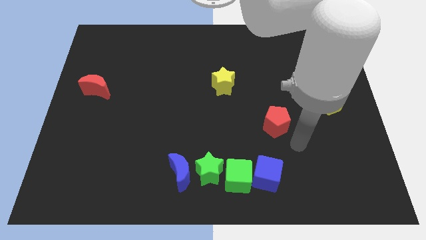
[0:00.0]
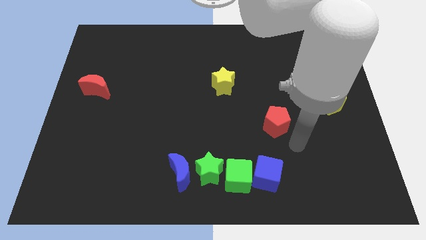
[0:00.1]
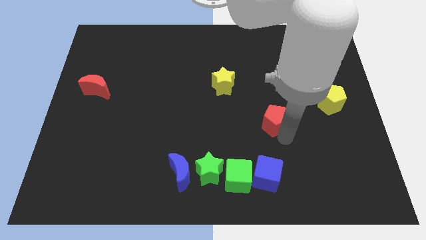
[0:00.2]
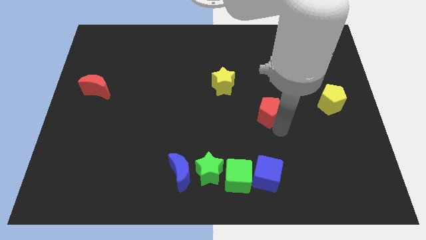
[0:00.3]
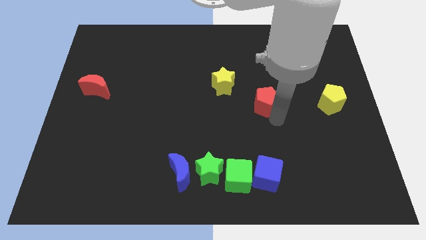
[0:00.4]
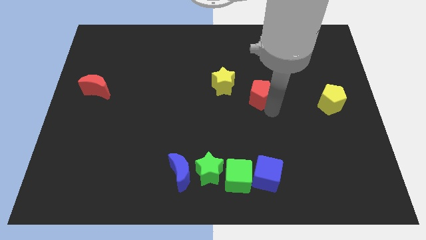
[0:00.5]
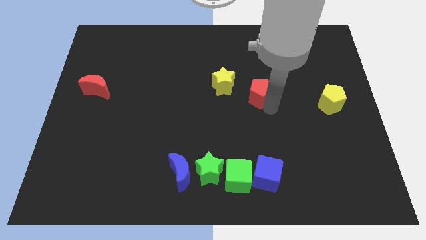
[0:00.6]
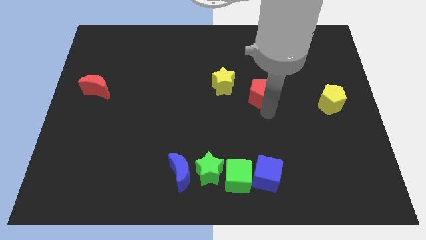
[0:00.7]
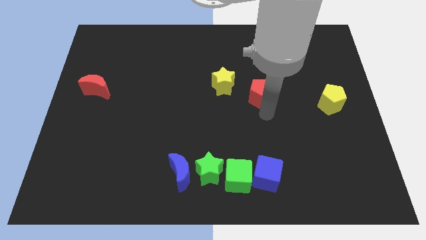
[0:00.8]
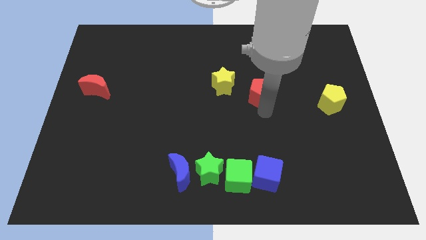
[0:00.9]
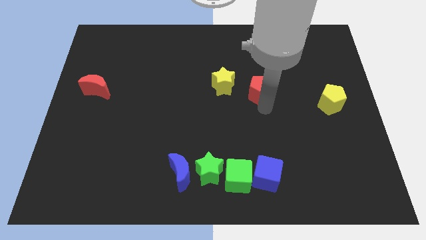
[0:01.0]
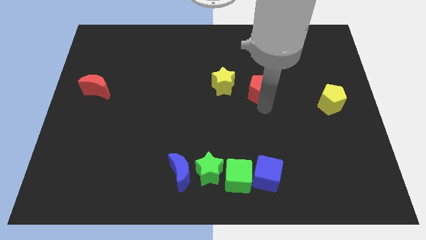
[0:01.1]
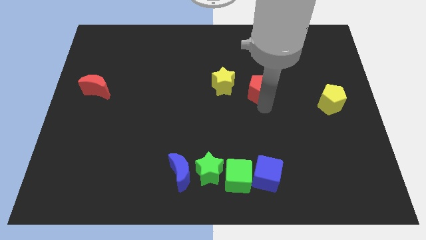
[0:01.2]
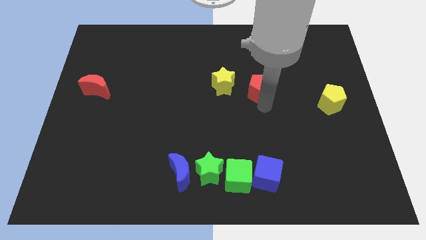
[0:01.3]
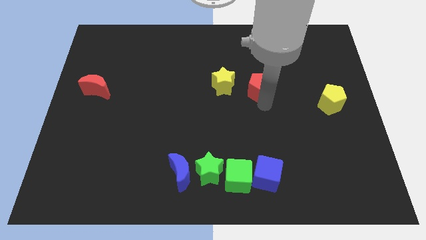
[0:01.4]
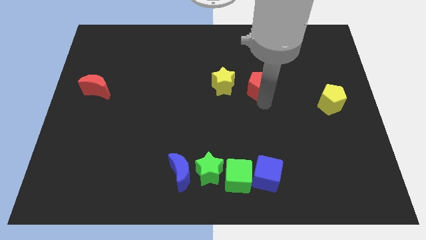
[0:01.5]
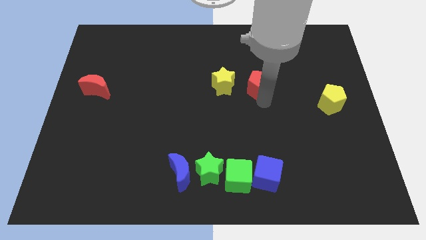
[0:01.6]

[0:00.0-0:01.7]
place the red pentagon to the right of the yellow star

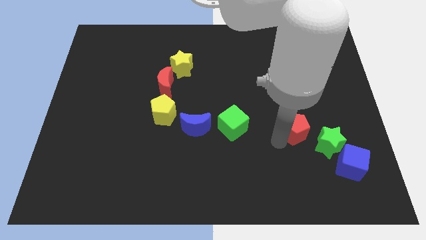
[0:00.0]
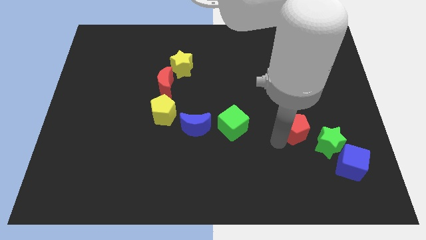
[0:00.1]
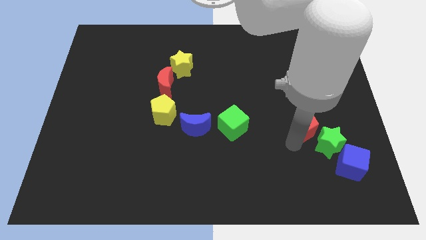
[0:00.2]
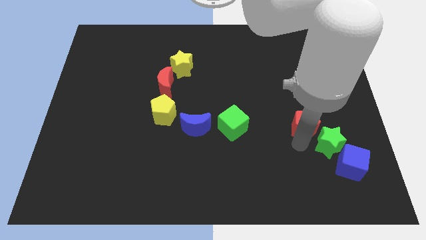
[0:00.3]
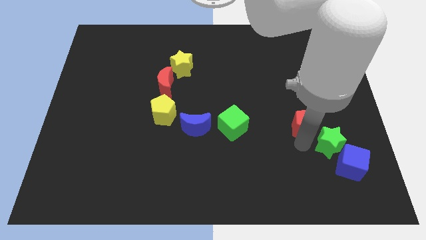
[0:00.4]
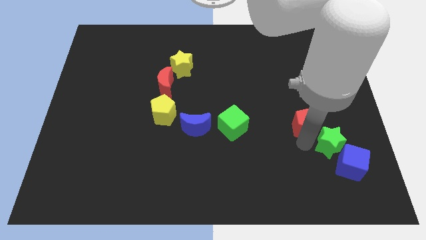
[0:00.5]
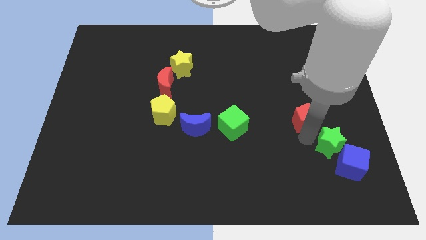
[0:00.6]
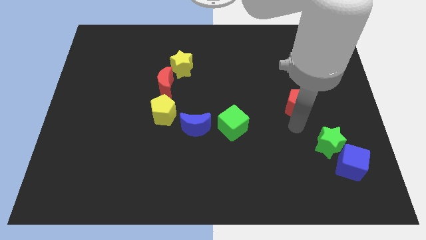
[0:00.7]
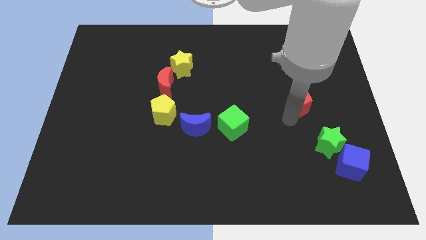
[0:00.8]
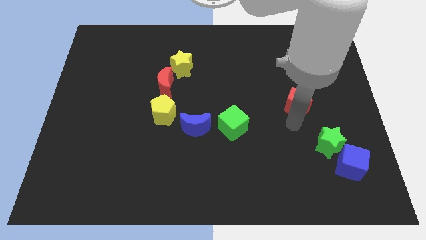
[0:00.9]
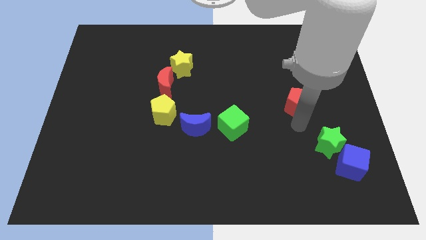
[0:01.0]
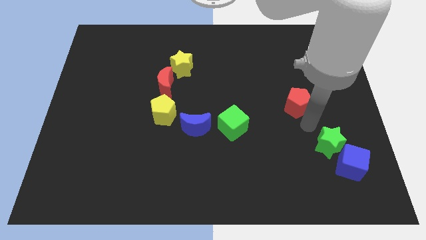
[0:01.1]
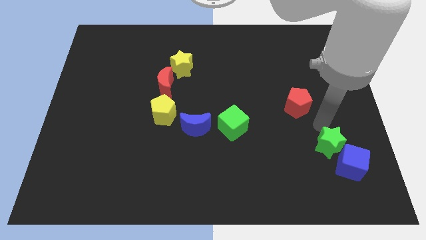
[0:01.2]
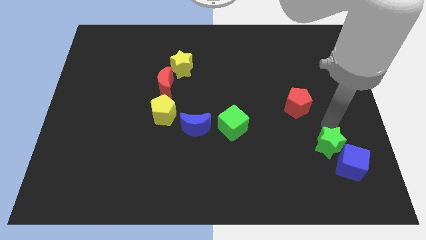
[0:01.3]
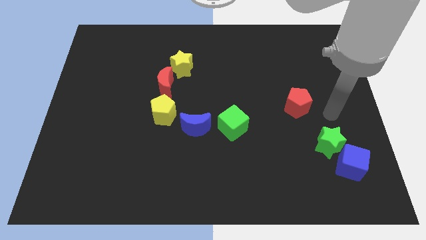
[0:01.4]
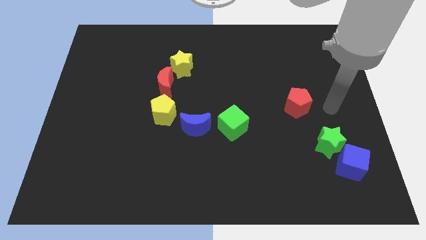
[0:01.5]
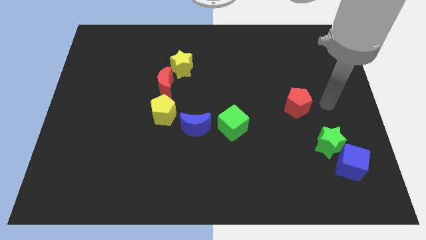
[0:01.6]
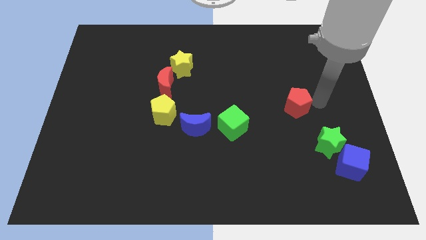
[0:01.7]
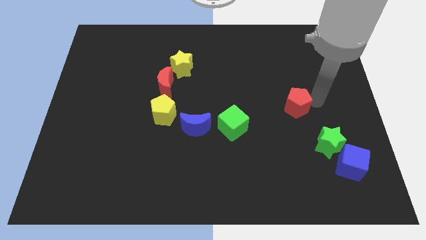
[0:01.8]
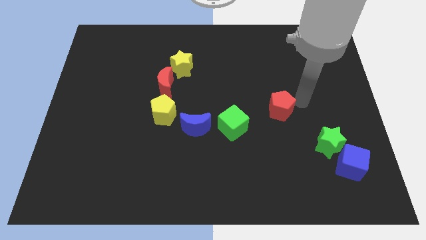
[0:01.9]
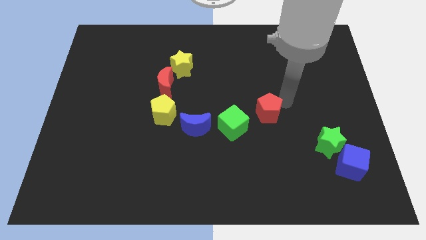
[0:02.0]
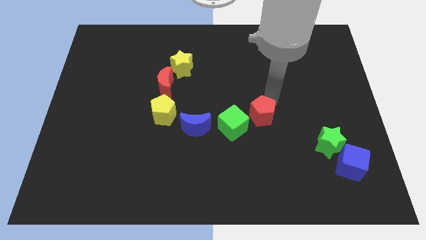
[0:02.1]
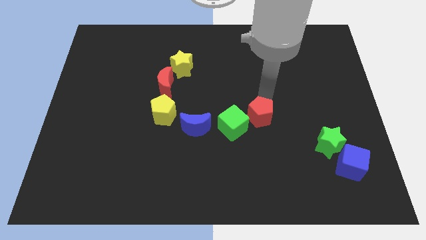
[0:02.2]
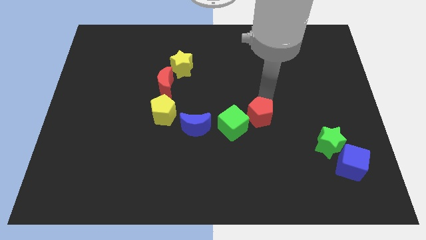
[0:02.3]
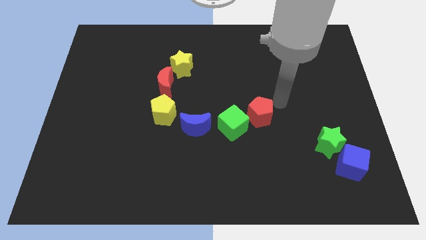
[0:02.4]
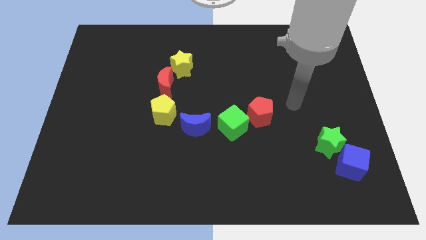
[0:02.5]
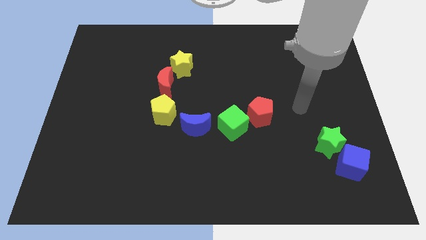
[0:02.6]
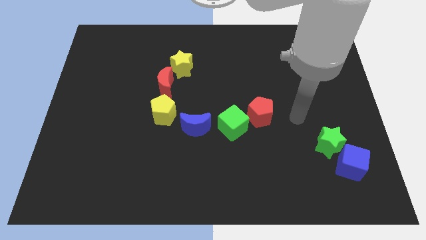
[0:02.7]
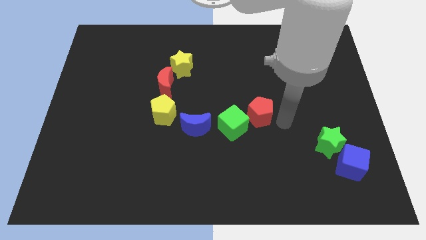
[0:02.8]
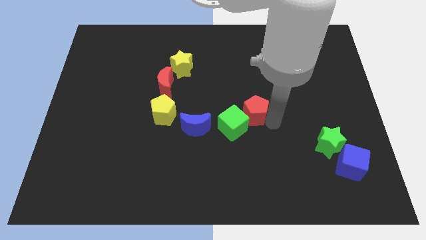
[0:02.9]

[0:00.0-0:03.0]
place red pentagon beside green cube

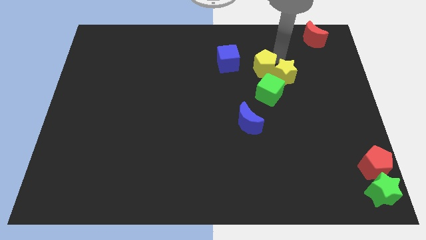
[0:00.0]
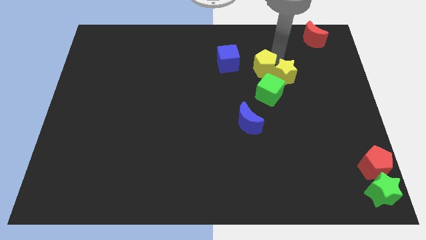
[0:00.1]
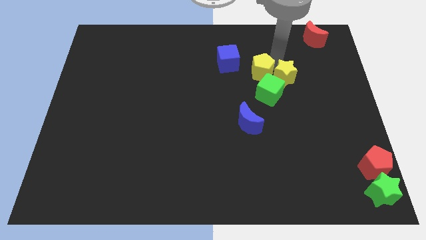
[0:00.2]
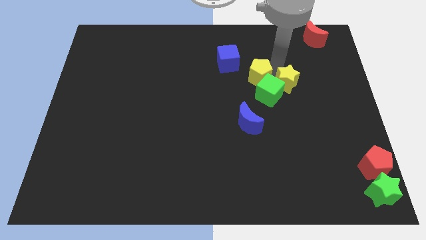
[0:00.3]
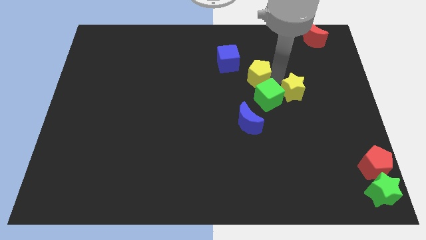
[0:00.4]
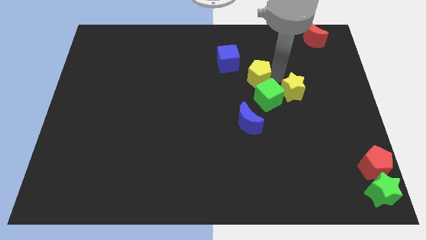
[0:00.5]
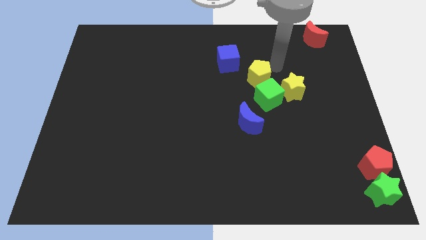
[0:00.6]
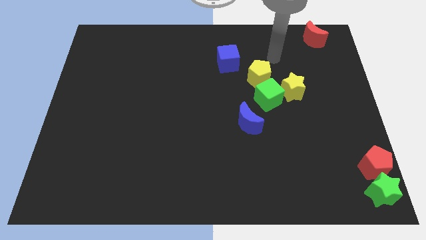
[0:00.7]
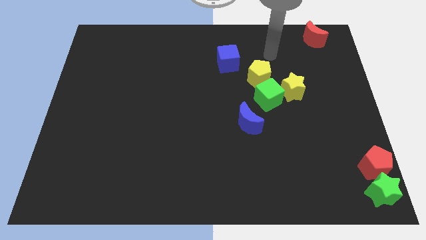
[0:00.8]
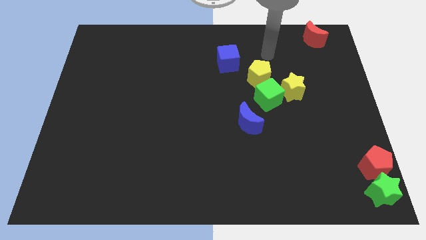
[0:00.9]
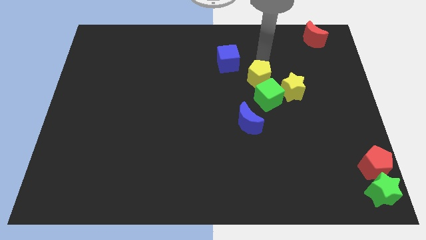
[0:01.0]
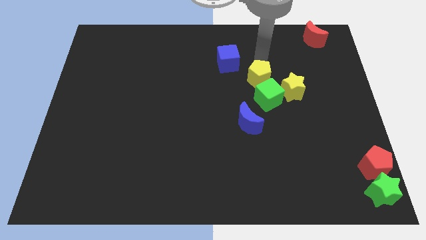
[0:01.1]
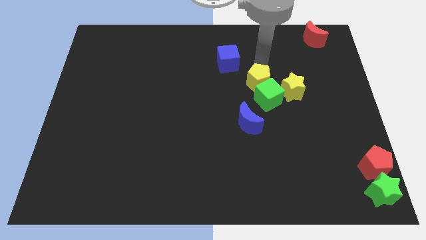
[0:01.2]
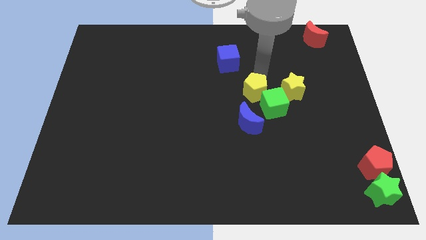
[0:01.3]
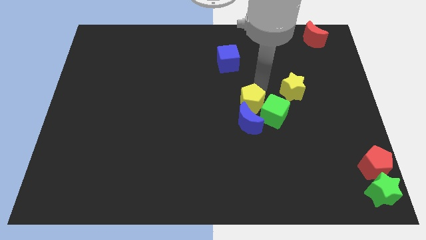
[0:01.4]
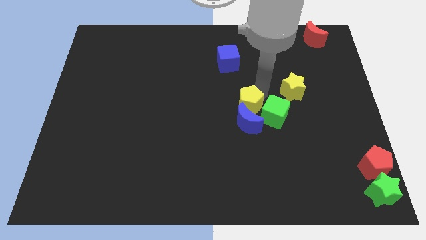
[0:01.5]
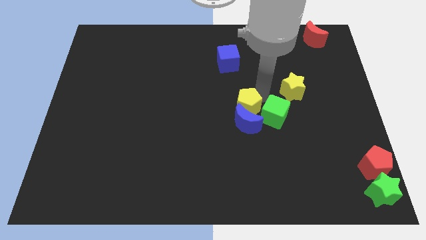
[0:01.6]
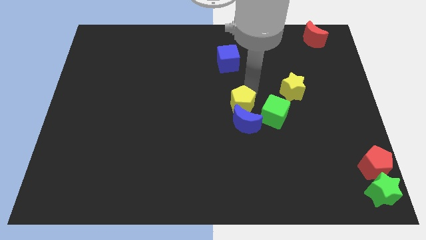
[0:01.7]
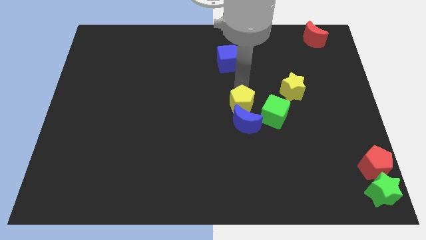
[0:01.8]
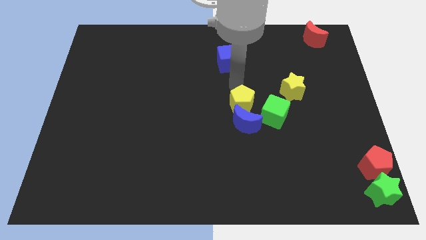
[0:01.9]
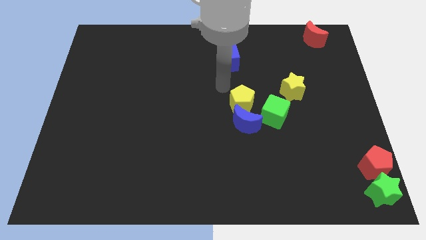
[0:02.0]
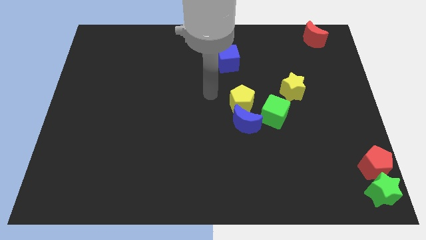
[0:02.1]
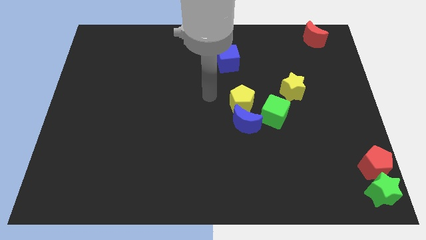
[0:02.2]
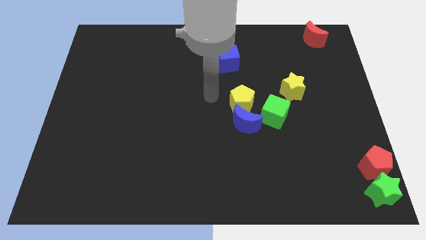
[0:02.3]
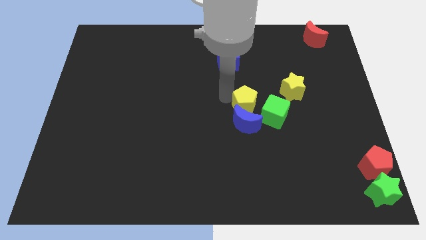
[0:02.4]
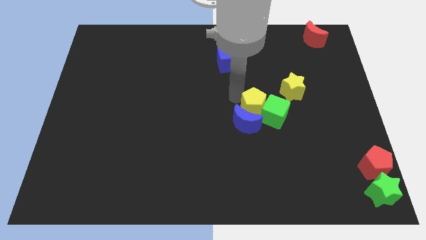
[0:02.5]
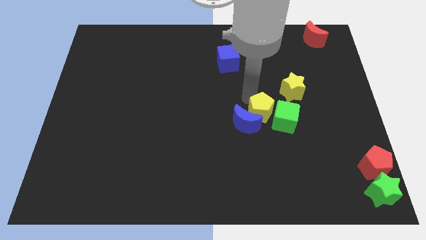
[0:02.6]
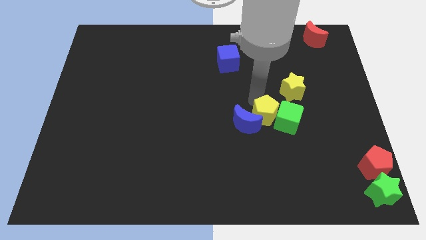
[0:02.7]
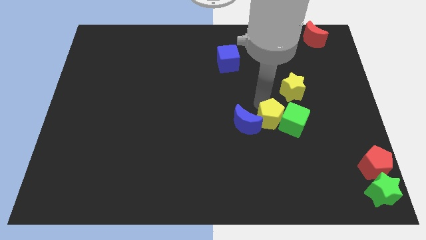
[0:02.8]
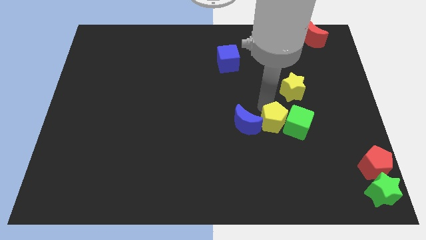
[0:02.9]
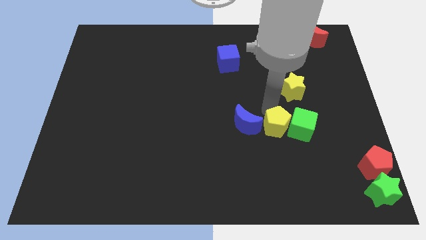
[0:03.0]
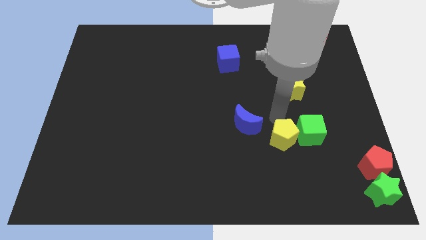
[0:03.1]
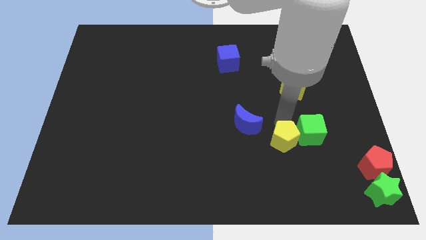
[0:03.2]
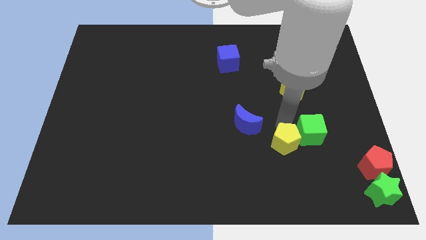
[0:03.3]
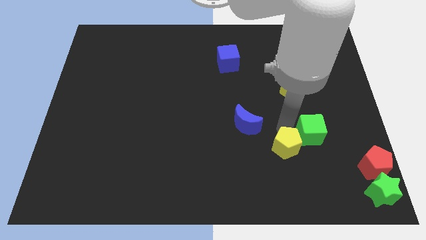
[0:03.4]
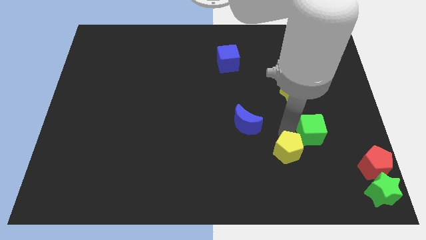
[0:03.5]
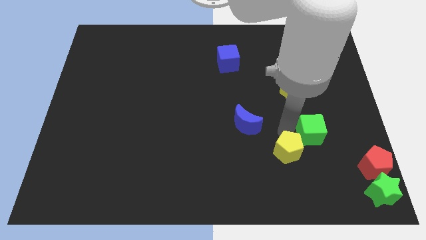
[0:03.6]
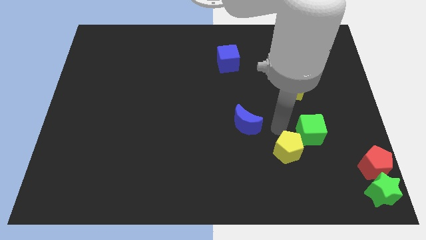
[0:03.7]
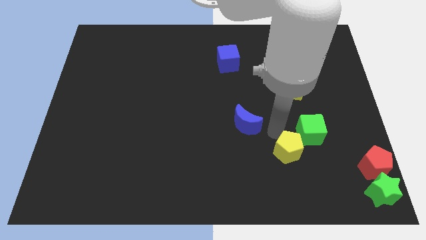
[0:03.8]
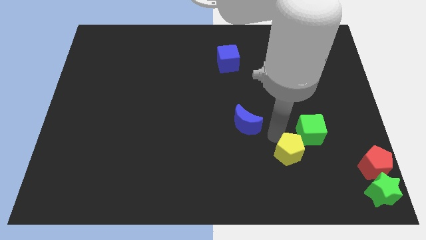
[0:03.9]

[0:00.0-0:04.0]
move the yellow pentagon and the green cube towards the bottom right

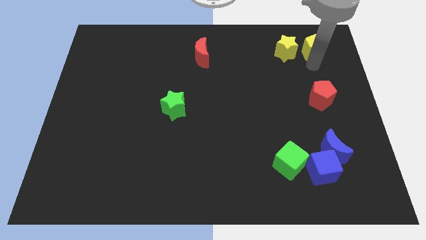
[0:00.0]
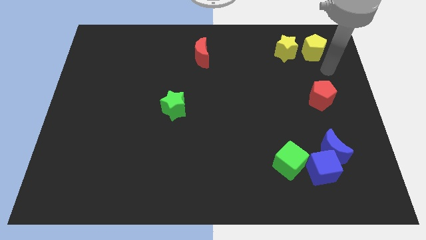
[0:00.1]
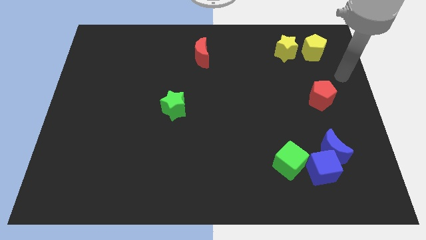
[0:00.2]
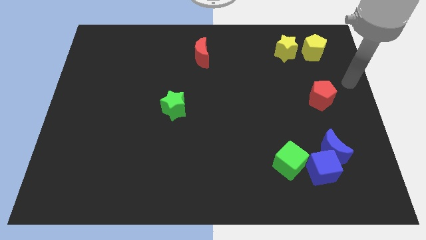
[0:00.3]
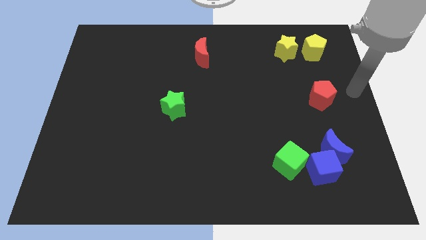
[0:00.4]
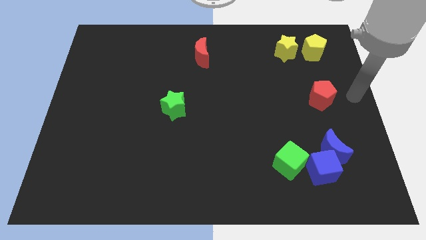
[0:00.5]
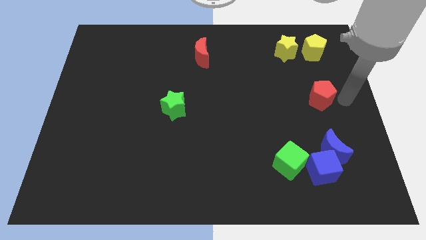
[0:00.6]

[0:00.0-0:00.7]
move your arm away from yellow star
